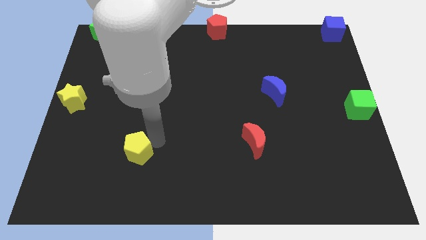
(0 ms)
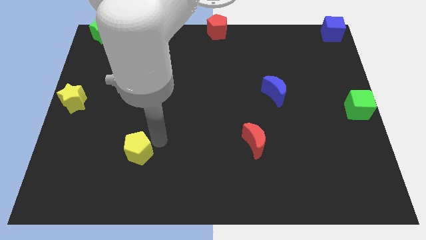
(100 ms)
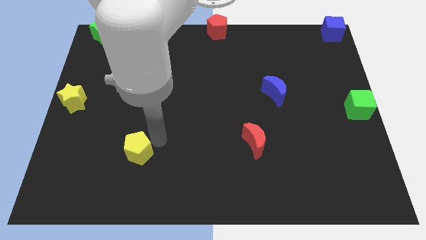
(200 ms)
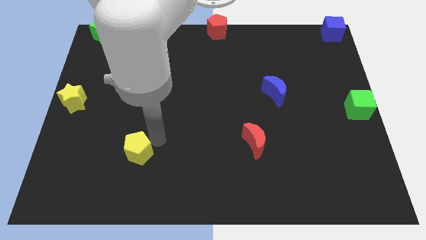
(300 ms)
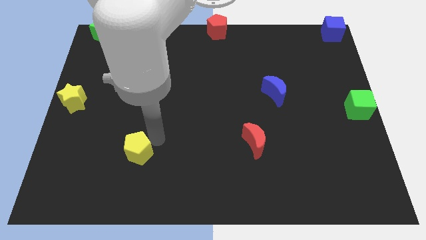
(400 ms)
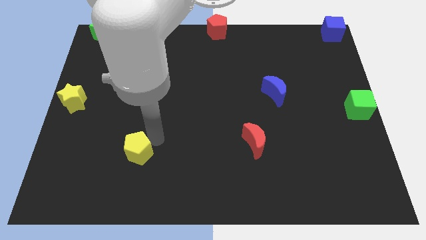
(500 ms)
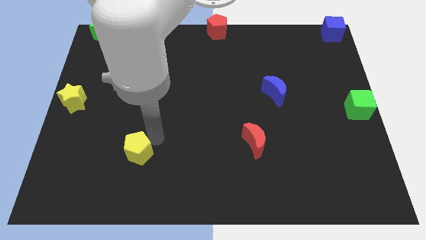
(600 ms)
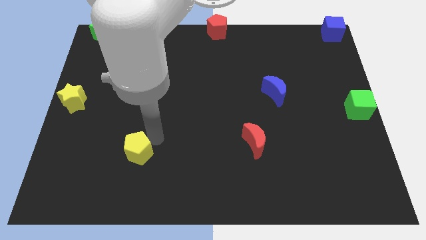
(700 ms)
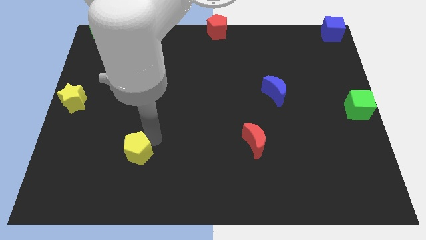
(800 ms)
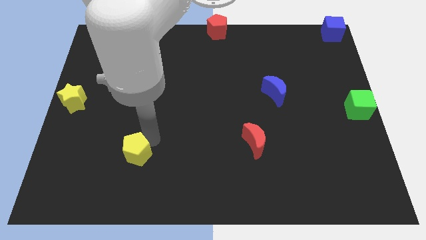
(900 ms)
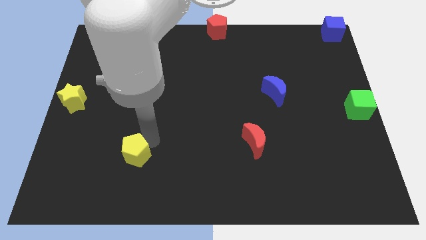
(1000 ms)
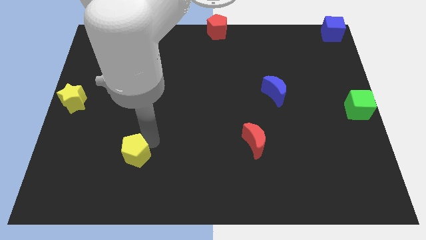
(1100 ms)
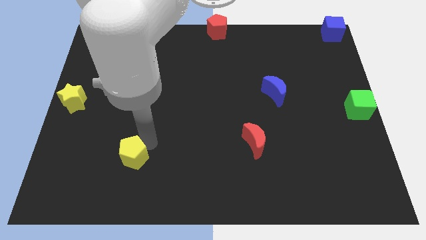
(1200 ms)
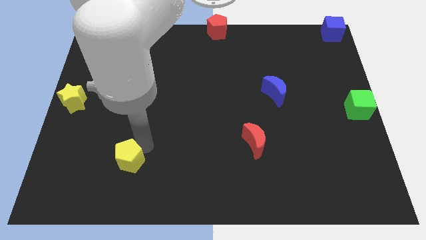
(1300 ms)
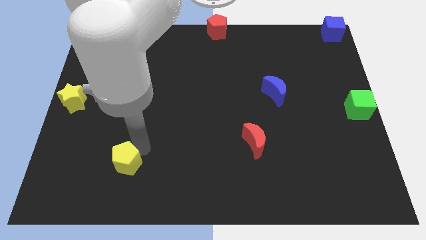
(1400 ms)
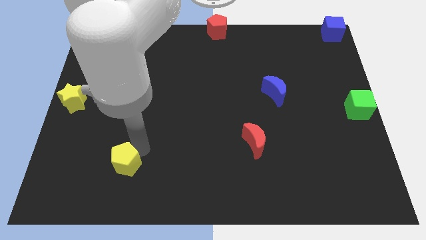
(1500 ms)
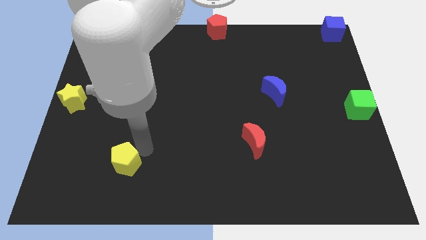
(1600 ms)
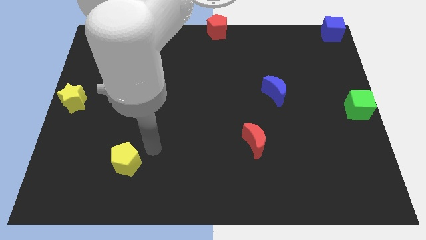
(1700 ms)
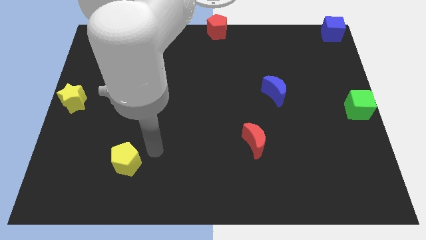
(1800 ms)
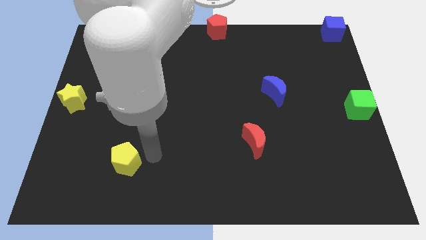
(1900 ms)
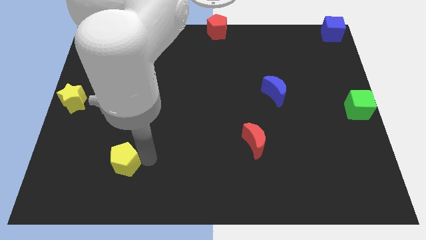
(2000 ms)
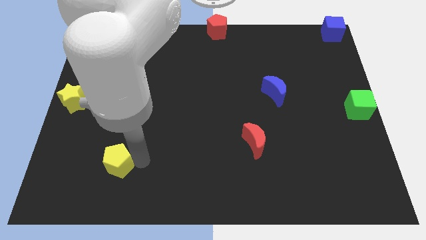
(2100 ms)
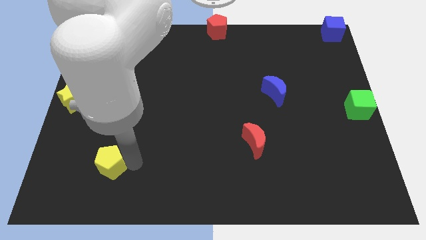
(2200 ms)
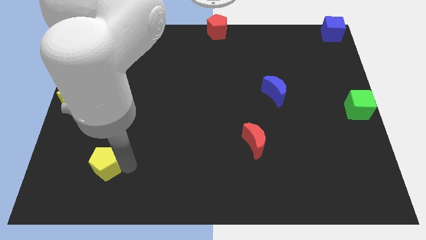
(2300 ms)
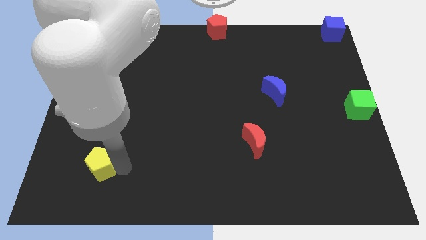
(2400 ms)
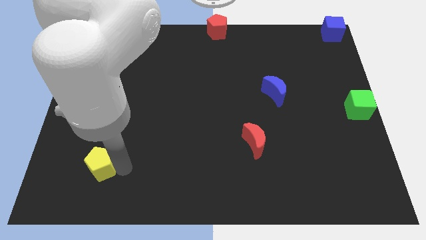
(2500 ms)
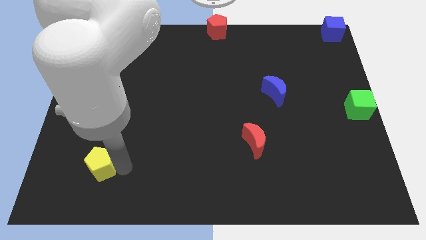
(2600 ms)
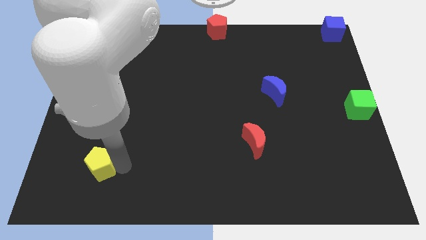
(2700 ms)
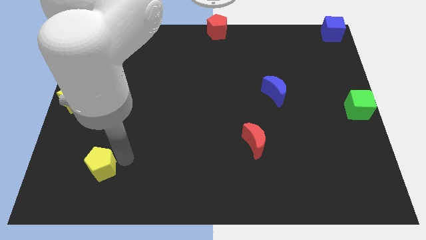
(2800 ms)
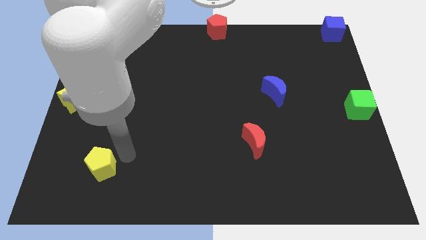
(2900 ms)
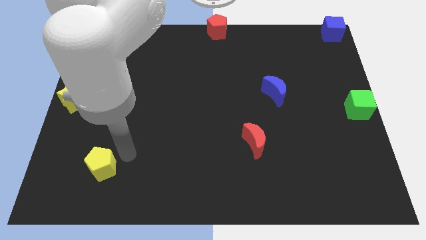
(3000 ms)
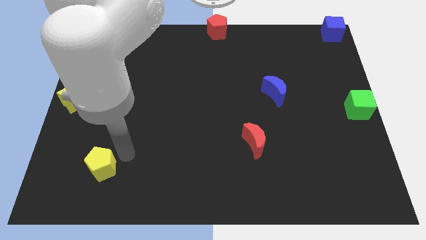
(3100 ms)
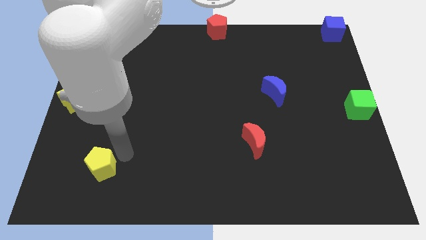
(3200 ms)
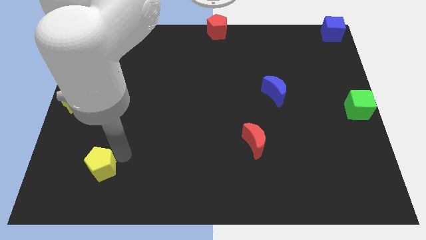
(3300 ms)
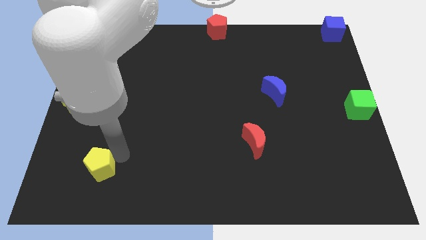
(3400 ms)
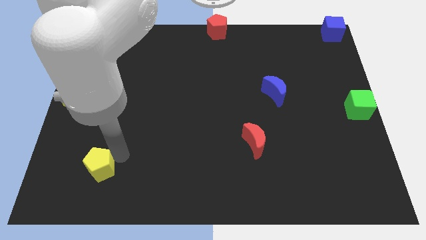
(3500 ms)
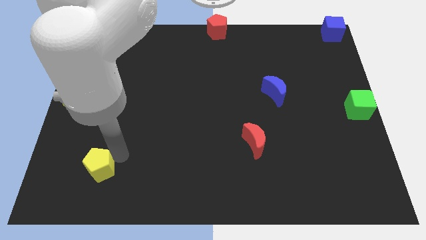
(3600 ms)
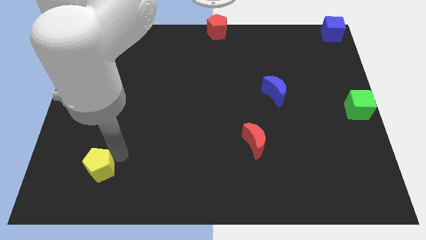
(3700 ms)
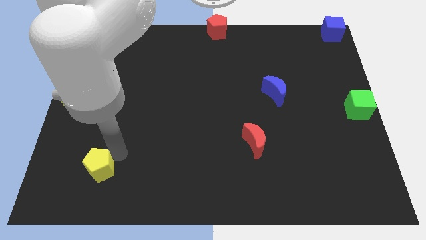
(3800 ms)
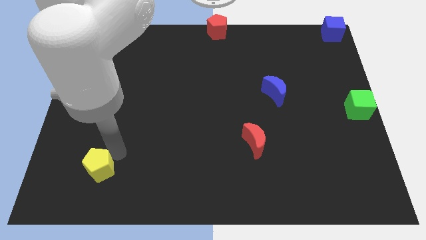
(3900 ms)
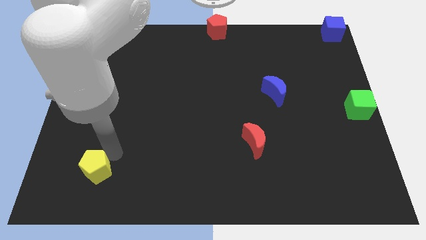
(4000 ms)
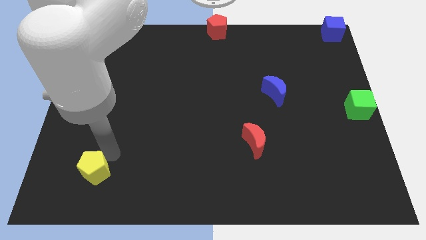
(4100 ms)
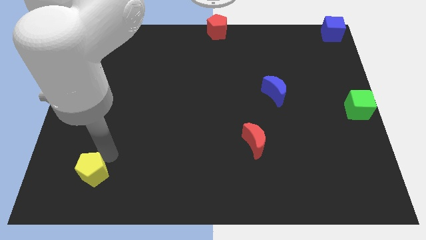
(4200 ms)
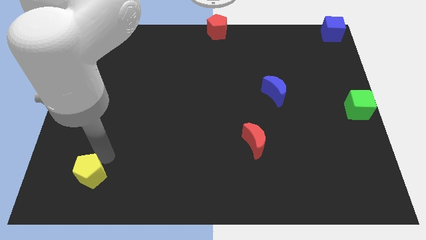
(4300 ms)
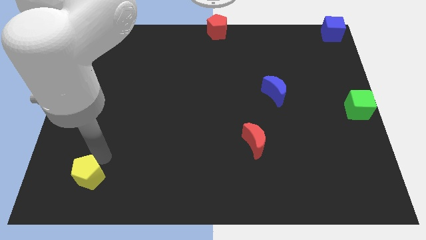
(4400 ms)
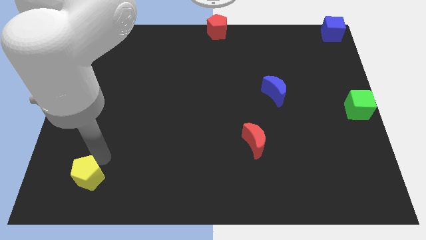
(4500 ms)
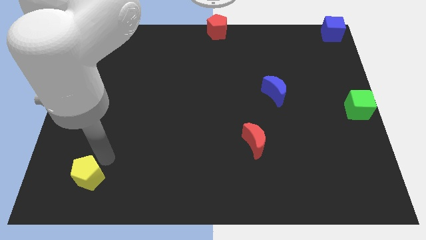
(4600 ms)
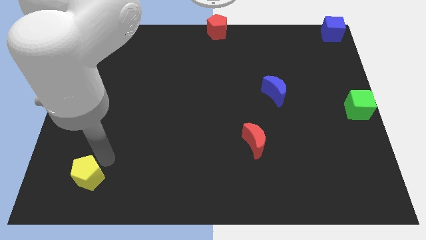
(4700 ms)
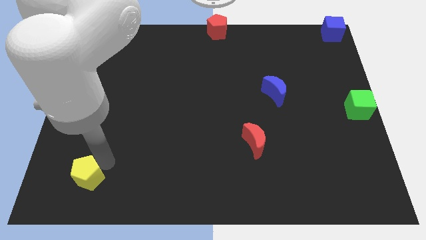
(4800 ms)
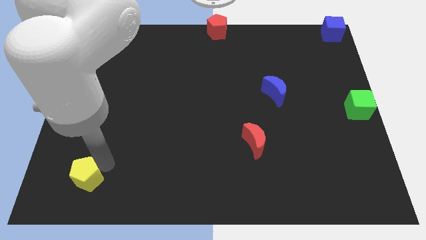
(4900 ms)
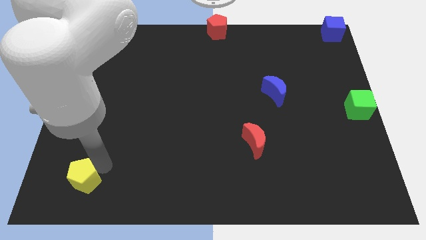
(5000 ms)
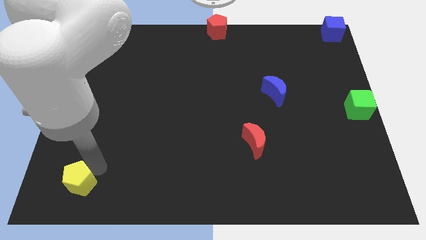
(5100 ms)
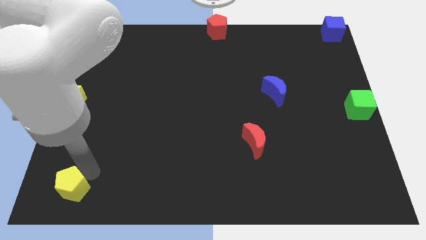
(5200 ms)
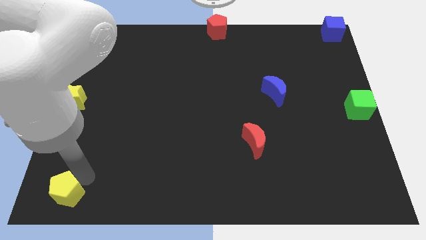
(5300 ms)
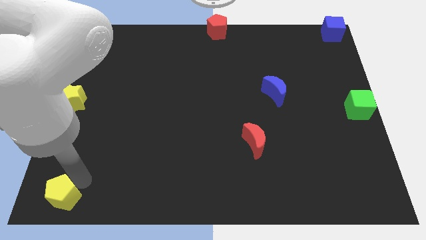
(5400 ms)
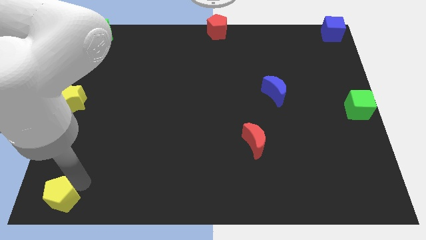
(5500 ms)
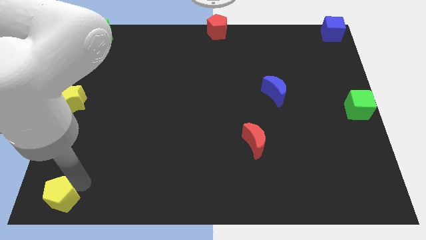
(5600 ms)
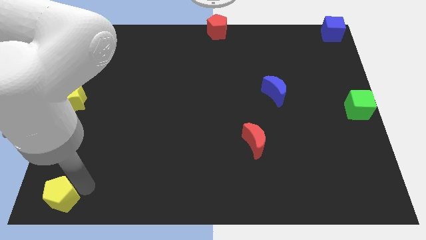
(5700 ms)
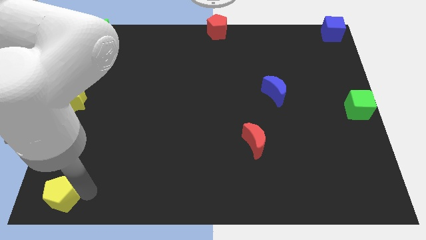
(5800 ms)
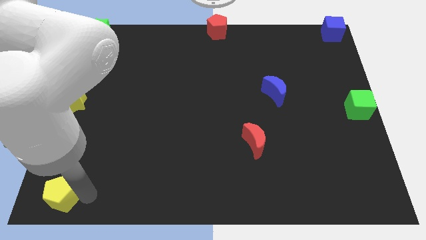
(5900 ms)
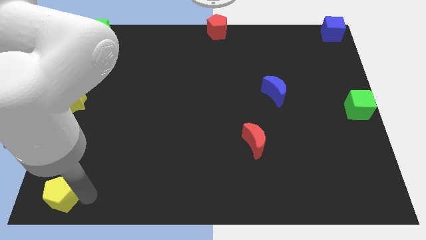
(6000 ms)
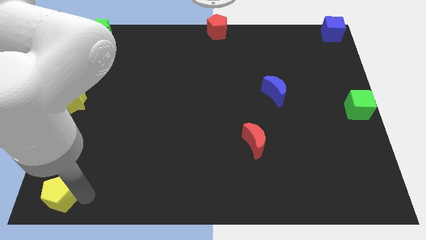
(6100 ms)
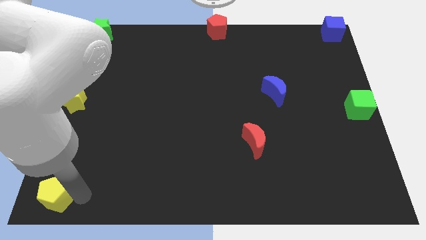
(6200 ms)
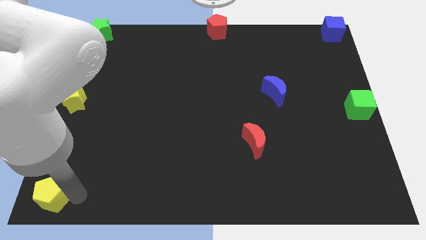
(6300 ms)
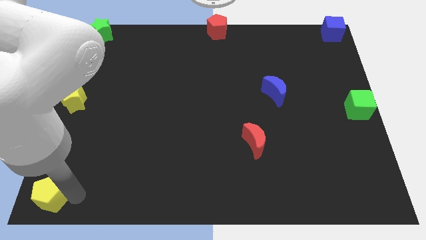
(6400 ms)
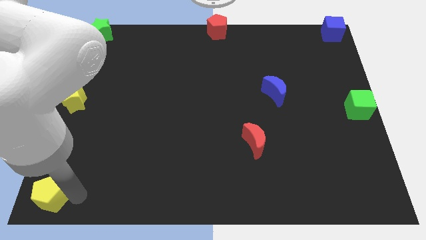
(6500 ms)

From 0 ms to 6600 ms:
push the yellow pentagon to the bottom left of the board

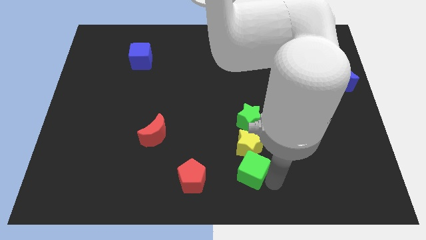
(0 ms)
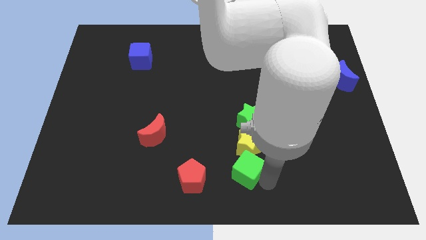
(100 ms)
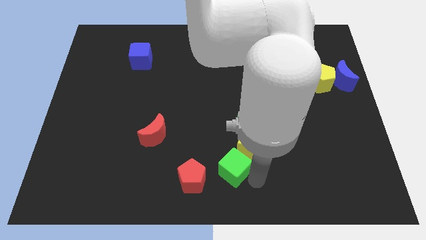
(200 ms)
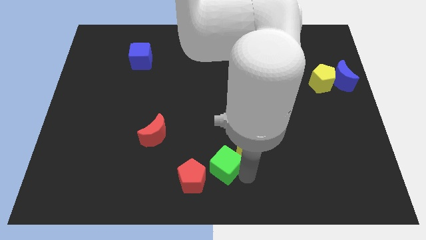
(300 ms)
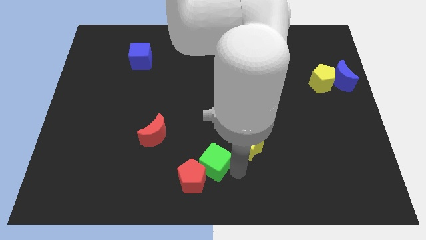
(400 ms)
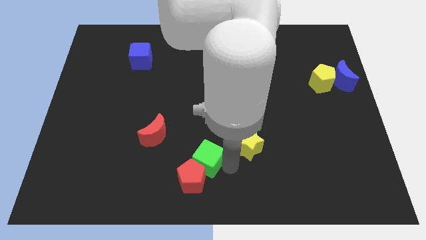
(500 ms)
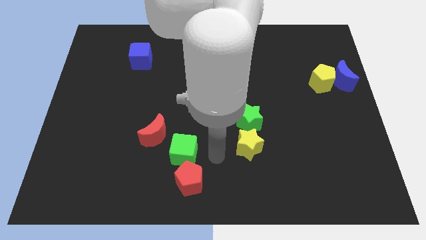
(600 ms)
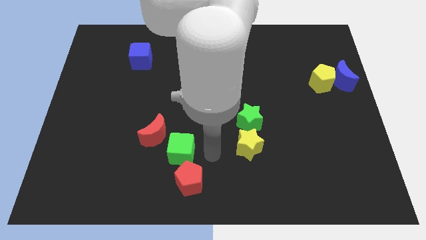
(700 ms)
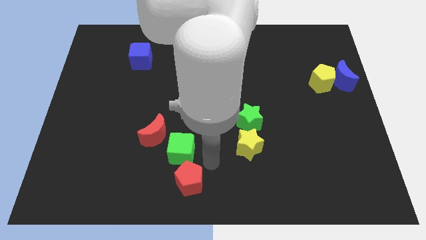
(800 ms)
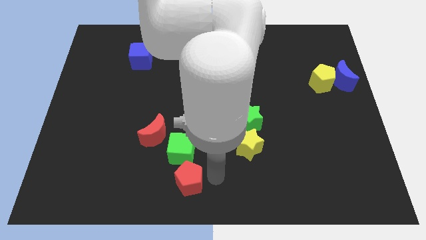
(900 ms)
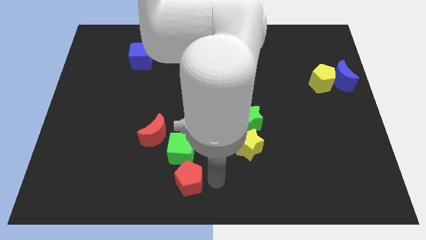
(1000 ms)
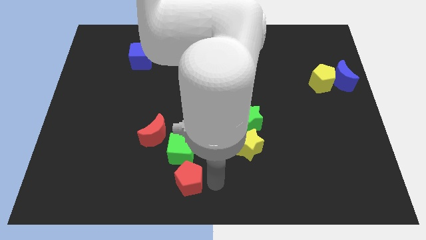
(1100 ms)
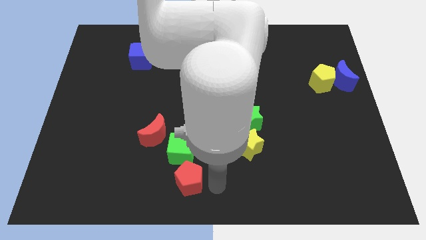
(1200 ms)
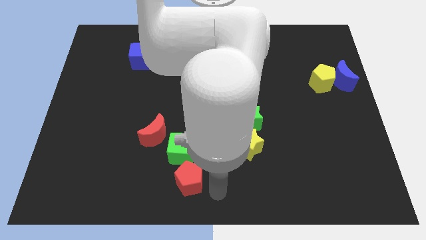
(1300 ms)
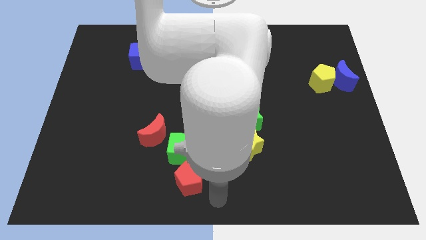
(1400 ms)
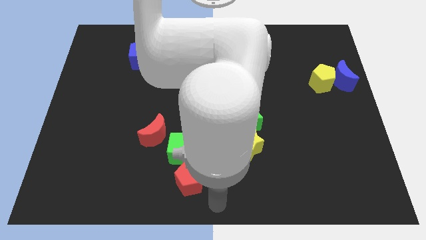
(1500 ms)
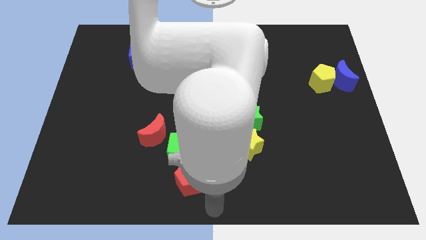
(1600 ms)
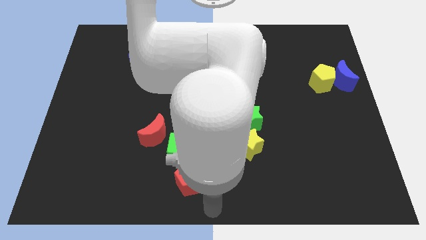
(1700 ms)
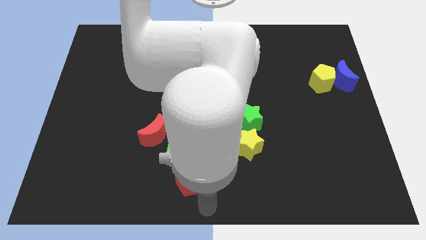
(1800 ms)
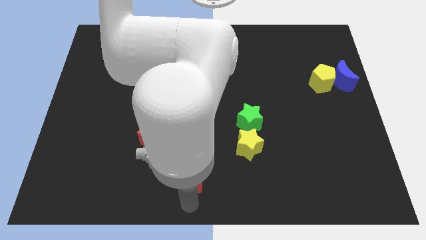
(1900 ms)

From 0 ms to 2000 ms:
push the green cube towards the red moon

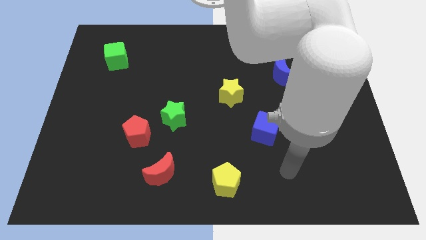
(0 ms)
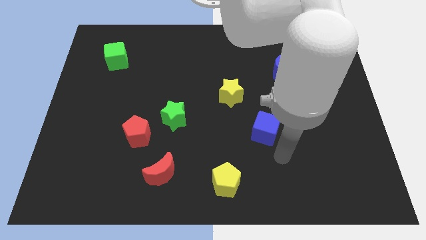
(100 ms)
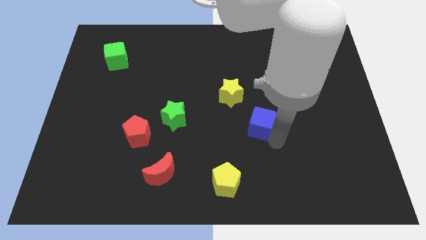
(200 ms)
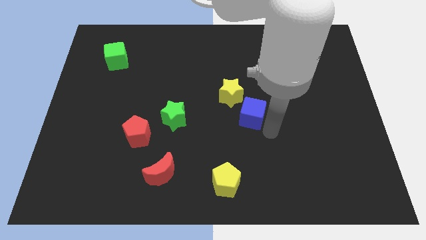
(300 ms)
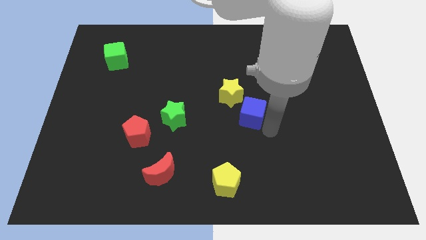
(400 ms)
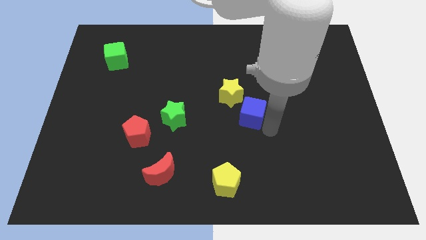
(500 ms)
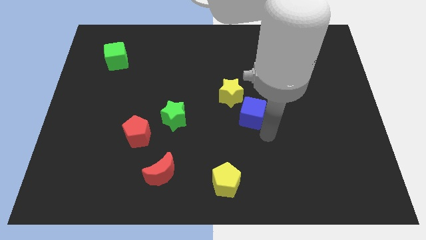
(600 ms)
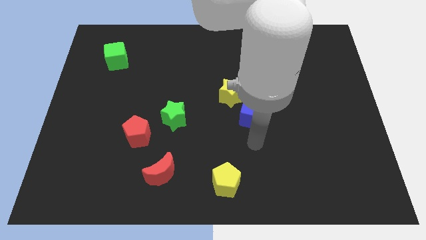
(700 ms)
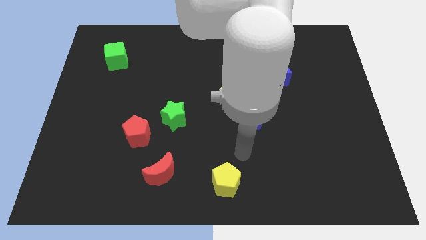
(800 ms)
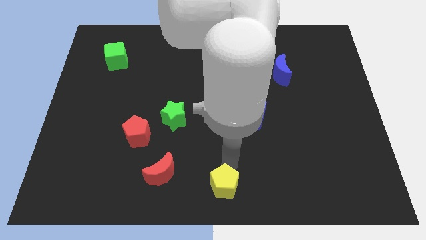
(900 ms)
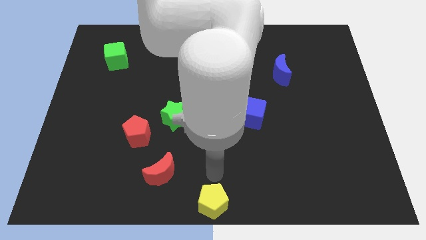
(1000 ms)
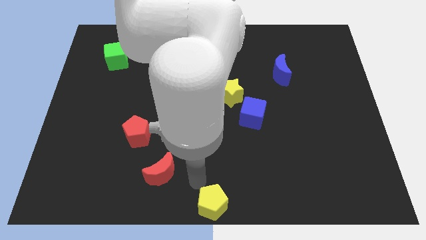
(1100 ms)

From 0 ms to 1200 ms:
push the blue cube diagonally to the yellow star
